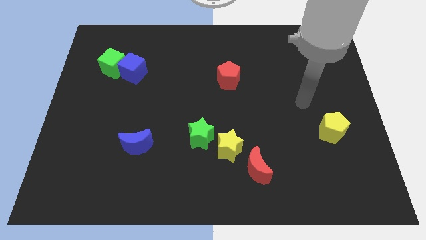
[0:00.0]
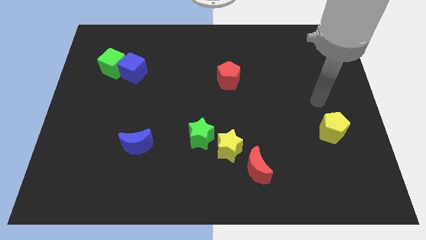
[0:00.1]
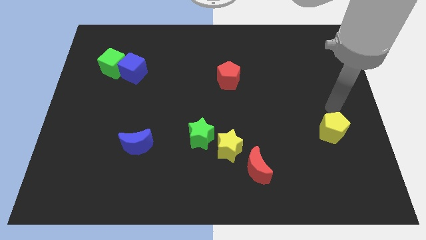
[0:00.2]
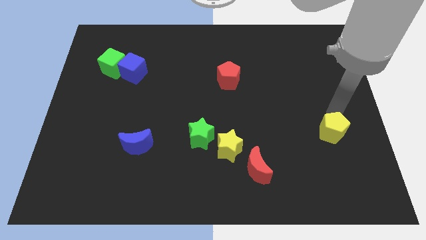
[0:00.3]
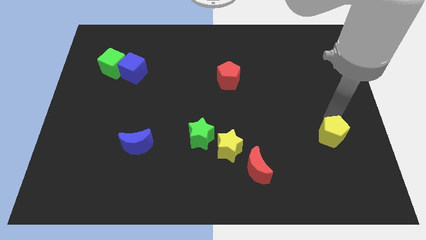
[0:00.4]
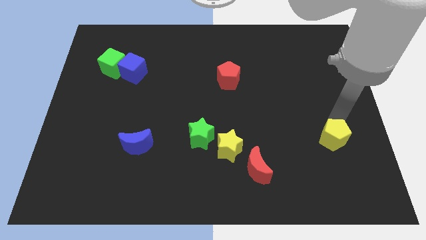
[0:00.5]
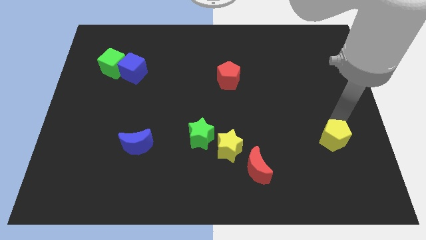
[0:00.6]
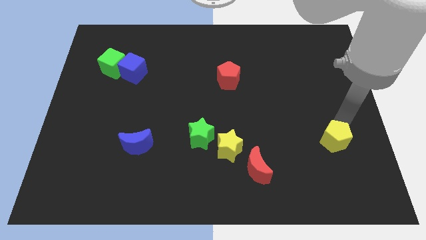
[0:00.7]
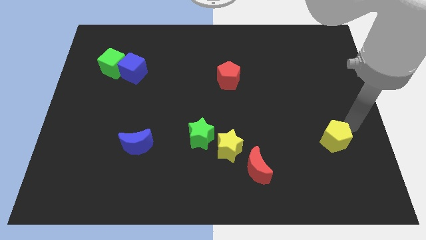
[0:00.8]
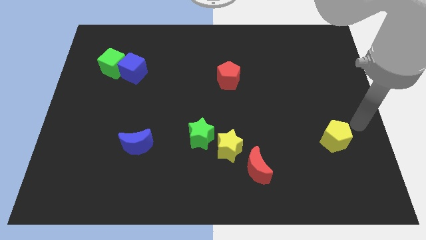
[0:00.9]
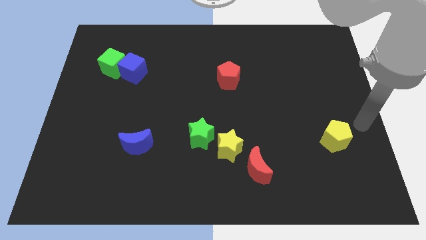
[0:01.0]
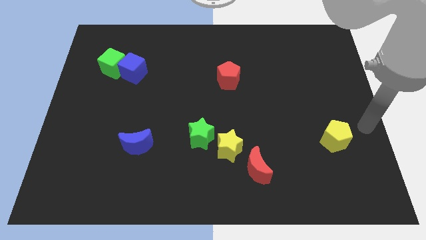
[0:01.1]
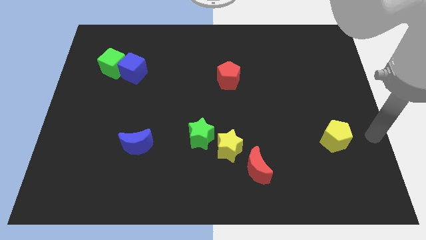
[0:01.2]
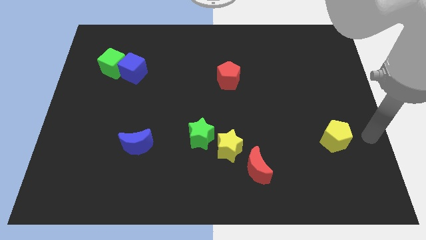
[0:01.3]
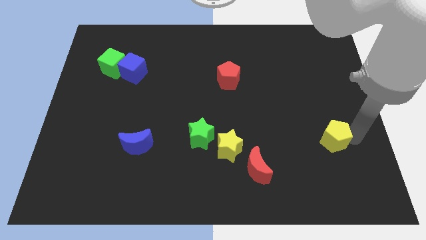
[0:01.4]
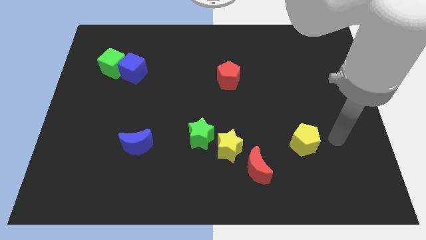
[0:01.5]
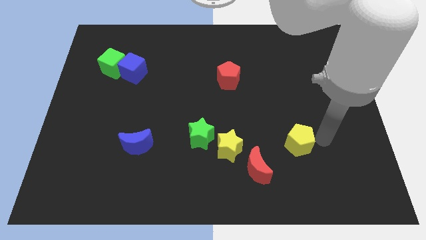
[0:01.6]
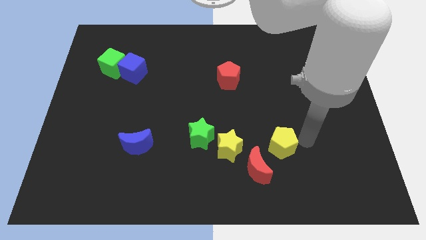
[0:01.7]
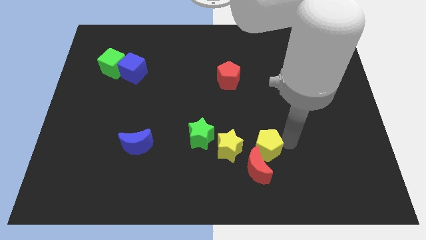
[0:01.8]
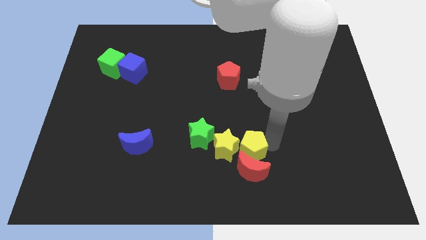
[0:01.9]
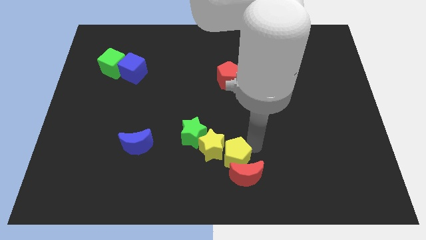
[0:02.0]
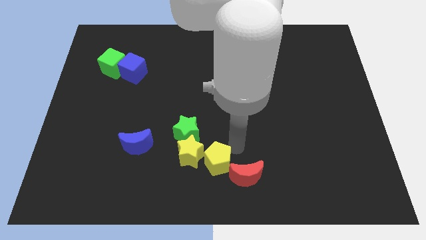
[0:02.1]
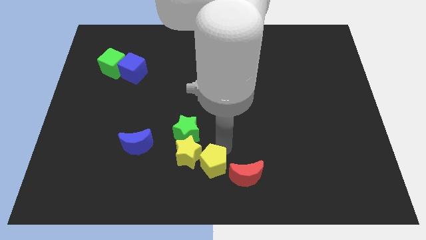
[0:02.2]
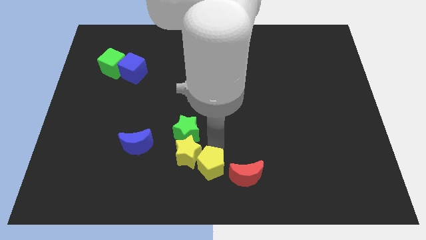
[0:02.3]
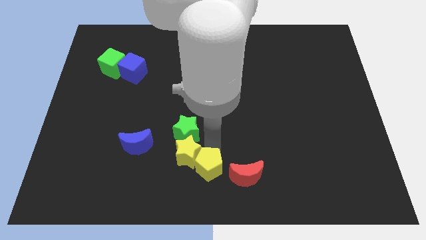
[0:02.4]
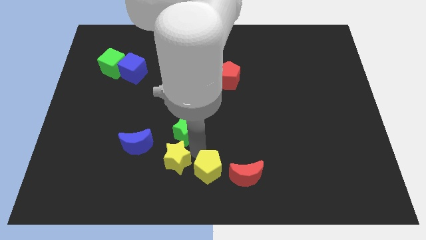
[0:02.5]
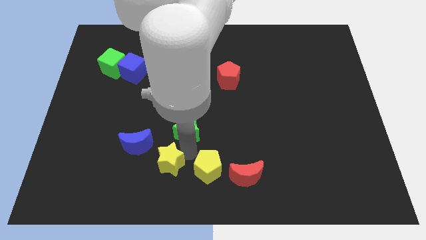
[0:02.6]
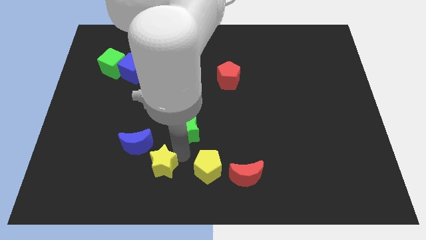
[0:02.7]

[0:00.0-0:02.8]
push the yellow pentagon into the yellow star

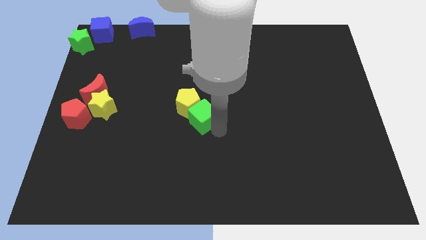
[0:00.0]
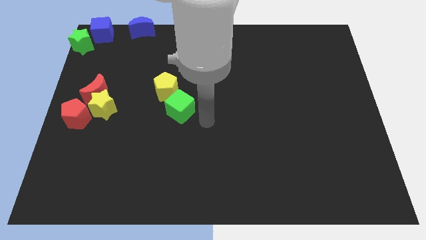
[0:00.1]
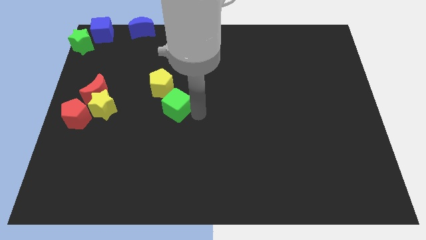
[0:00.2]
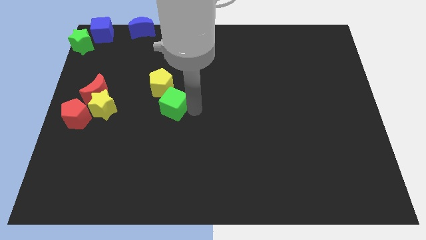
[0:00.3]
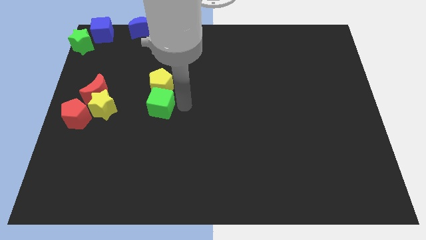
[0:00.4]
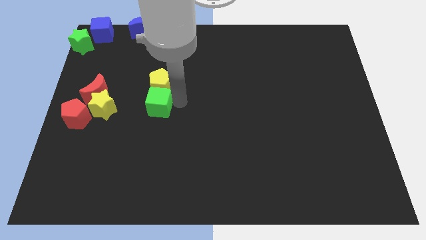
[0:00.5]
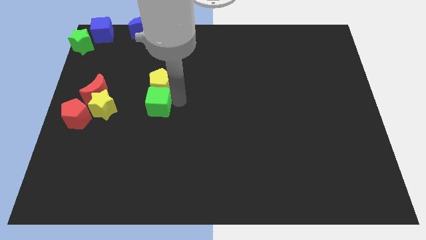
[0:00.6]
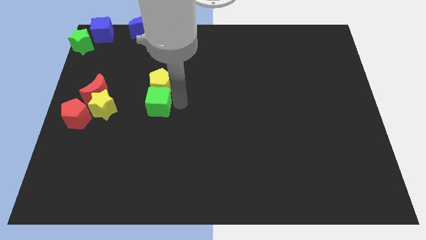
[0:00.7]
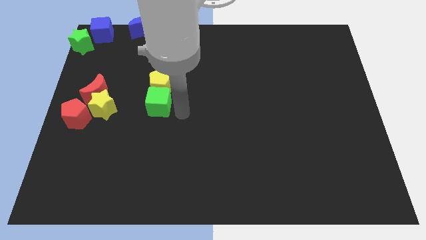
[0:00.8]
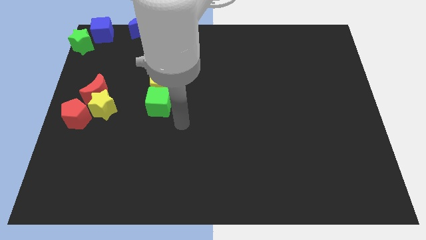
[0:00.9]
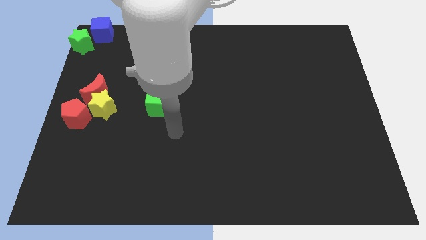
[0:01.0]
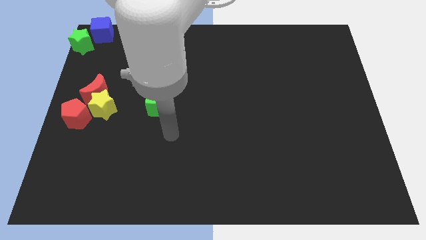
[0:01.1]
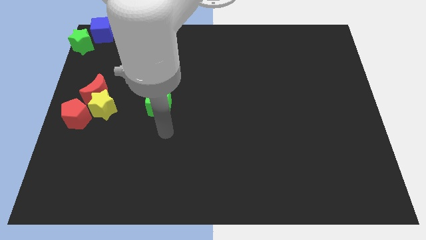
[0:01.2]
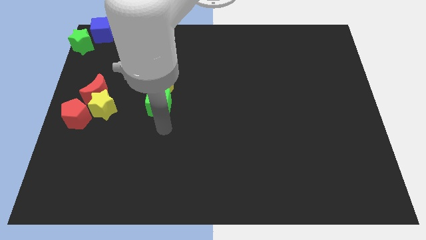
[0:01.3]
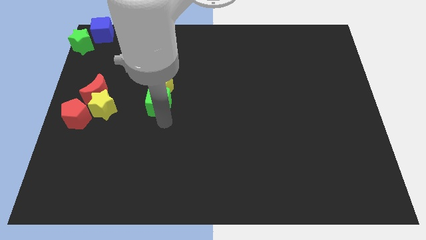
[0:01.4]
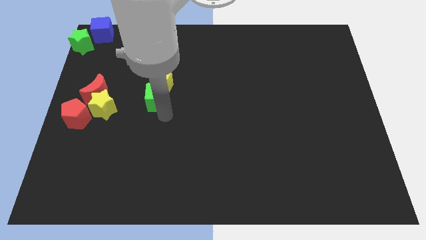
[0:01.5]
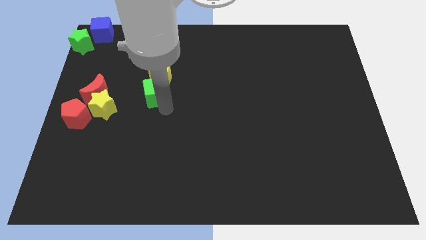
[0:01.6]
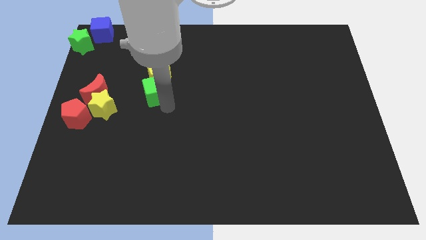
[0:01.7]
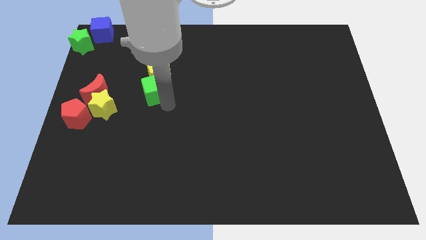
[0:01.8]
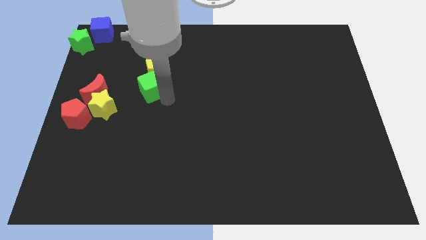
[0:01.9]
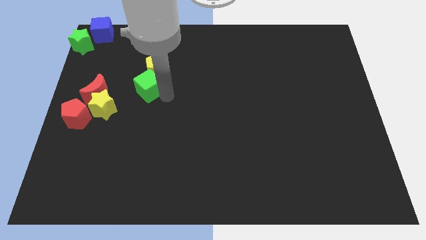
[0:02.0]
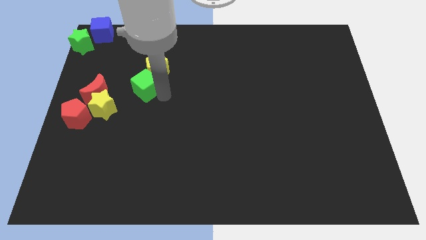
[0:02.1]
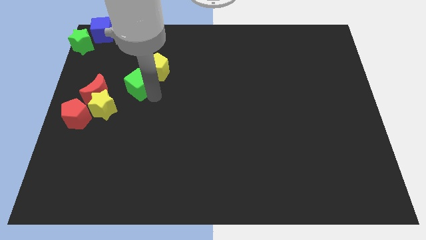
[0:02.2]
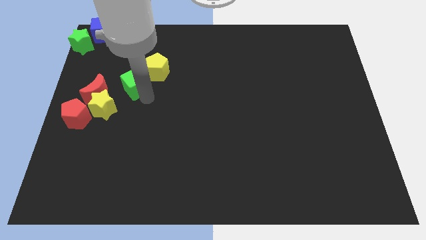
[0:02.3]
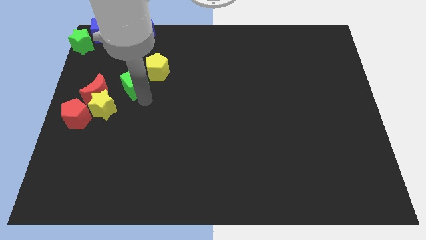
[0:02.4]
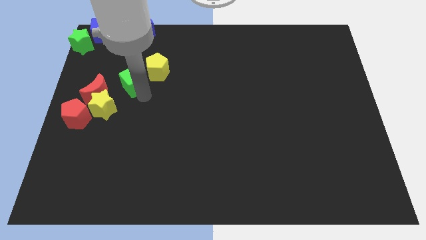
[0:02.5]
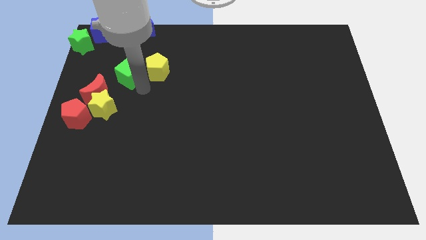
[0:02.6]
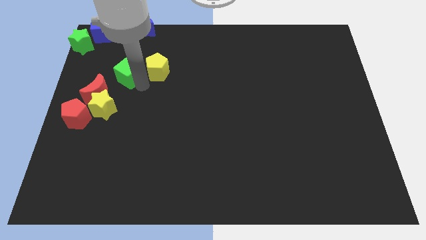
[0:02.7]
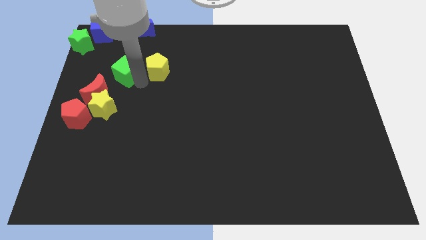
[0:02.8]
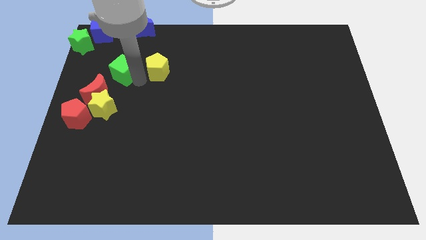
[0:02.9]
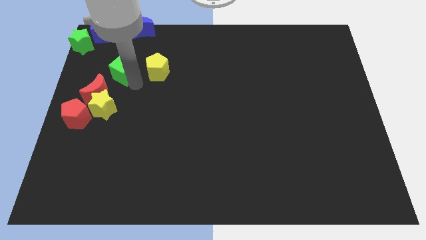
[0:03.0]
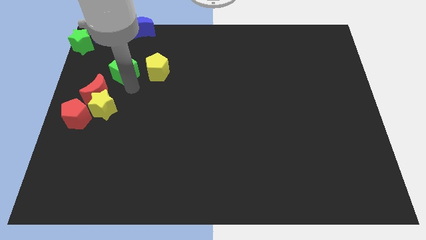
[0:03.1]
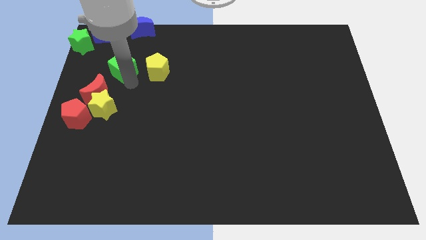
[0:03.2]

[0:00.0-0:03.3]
push the green cube to the left of the yellow pentagon

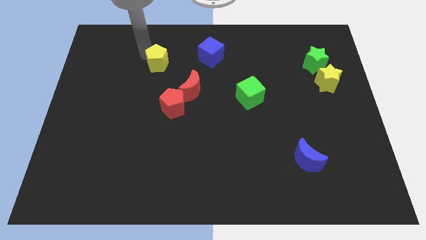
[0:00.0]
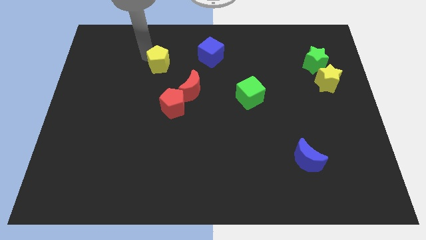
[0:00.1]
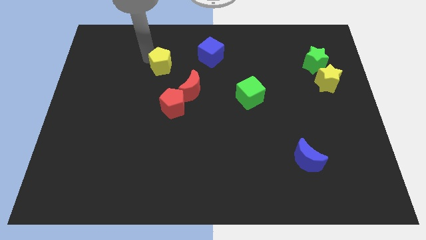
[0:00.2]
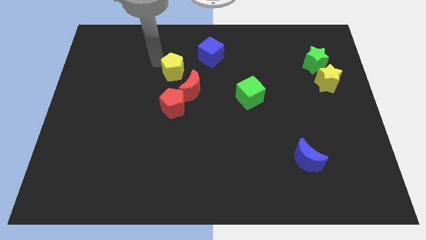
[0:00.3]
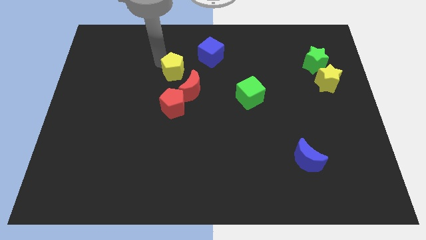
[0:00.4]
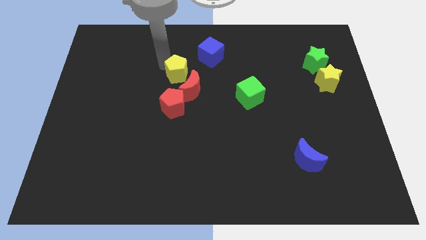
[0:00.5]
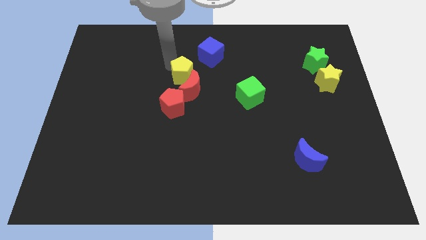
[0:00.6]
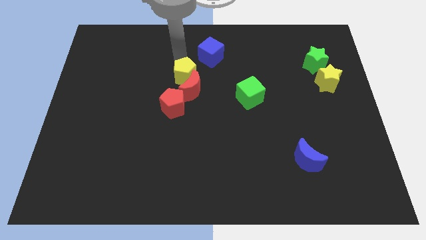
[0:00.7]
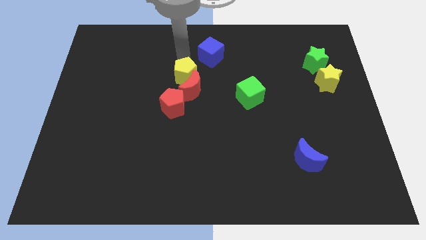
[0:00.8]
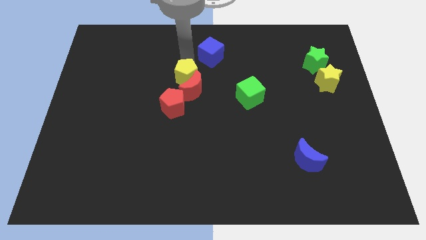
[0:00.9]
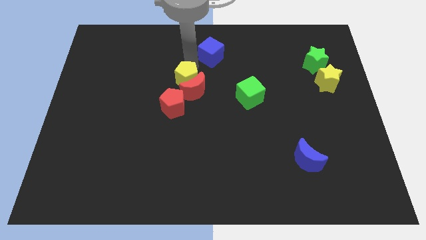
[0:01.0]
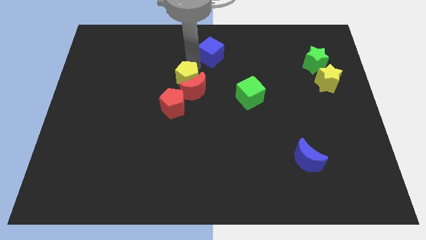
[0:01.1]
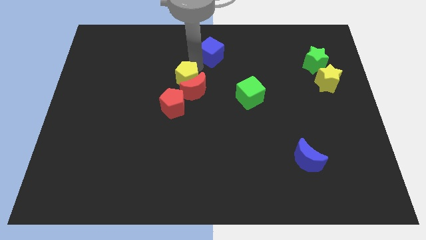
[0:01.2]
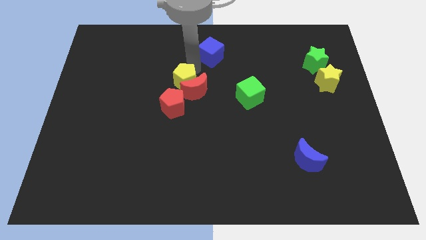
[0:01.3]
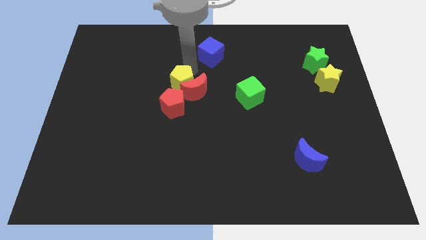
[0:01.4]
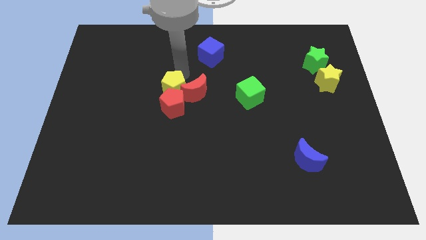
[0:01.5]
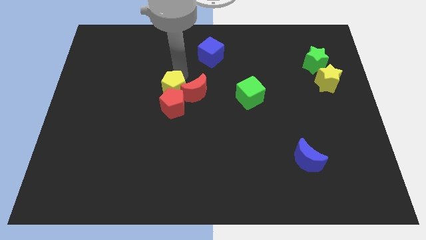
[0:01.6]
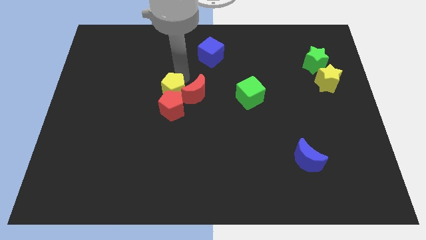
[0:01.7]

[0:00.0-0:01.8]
push the yellow pentagon close to the red blocks

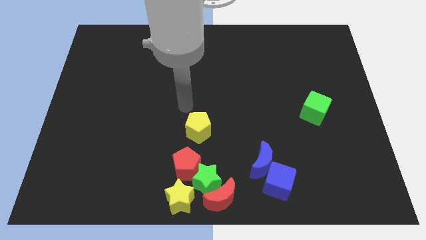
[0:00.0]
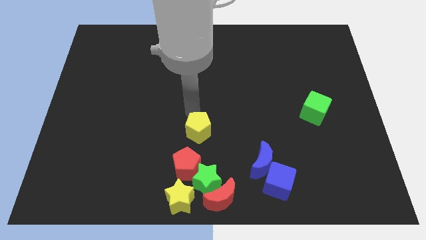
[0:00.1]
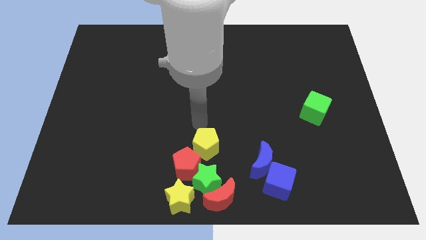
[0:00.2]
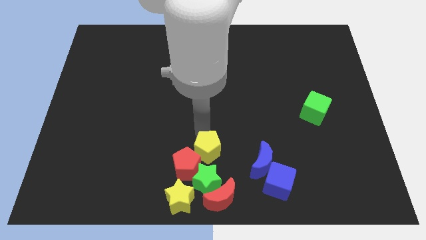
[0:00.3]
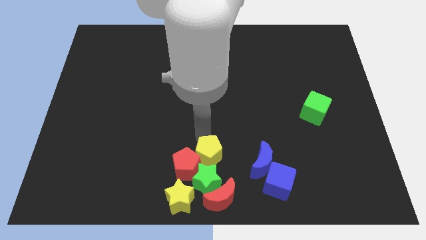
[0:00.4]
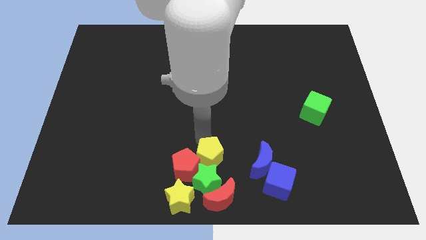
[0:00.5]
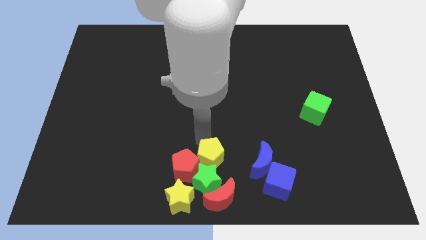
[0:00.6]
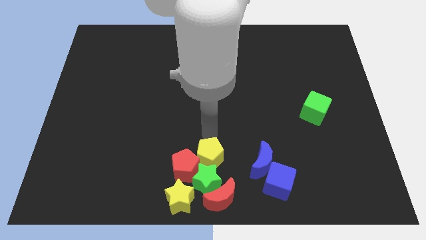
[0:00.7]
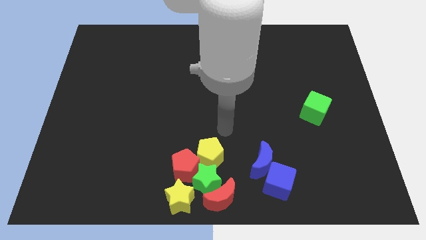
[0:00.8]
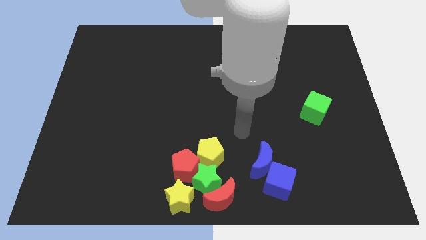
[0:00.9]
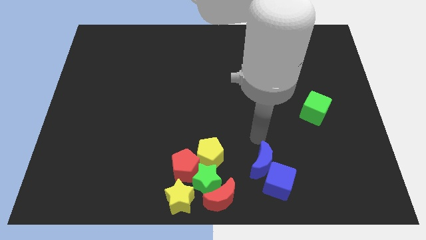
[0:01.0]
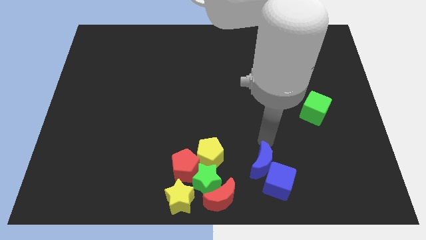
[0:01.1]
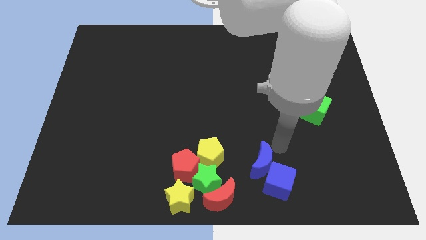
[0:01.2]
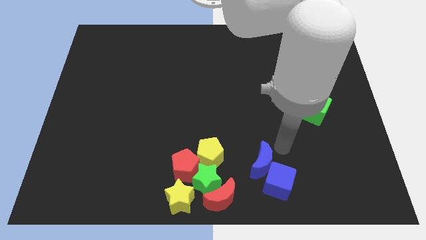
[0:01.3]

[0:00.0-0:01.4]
move the yellow pentagon into the red pentagon
